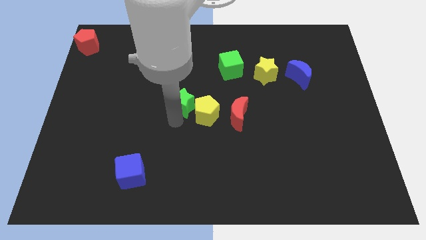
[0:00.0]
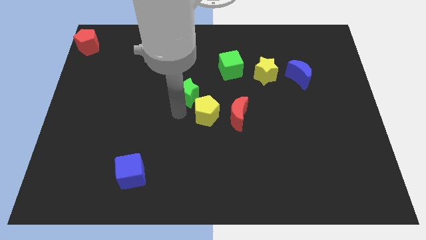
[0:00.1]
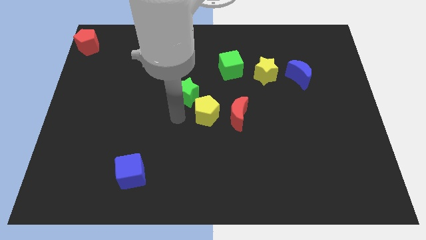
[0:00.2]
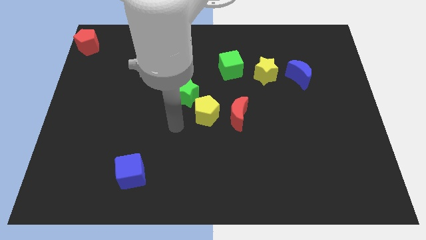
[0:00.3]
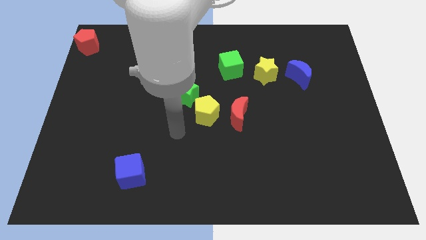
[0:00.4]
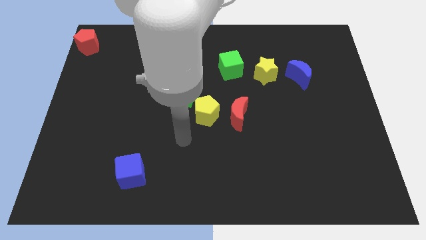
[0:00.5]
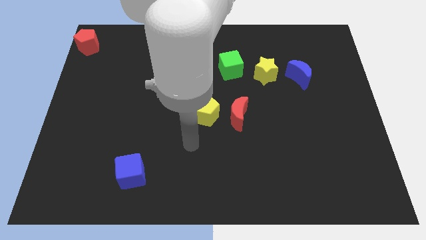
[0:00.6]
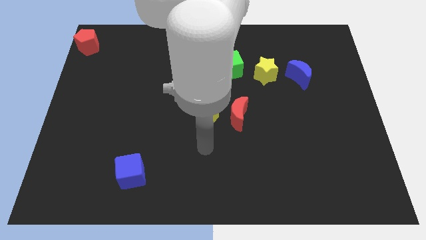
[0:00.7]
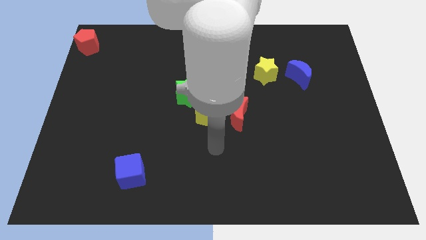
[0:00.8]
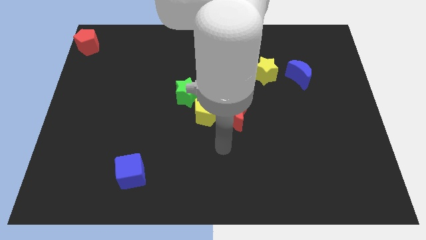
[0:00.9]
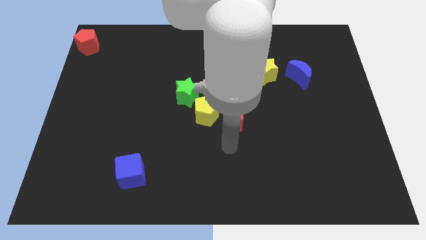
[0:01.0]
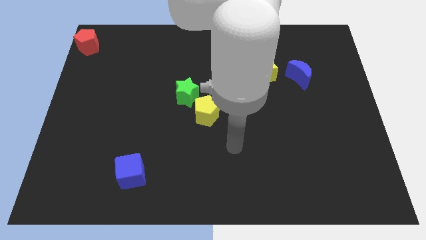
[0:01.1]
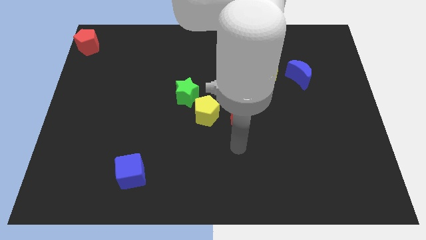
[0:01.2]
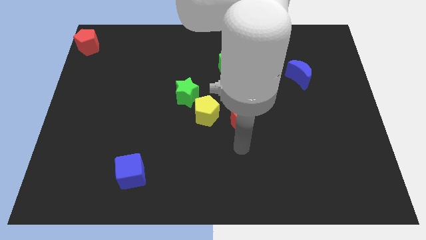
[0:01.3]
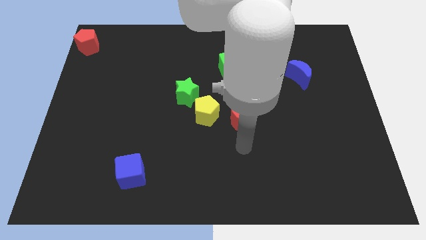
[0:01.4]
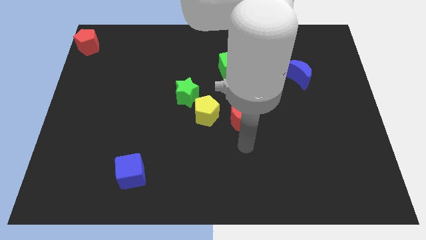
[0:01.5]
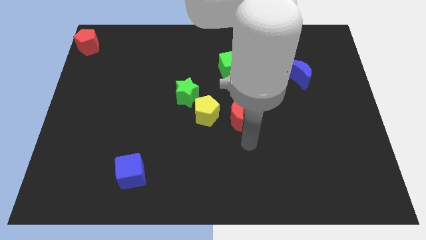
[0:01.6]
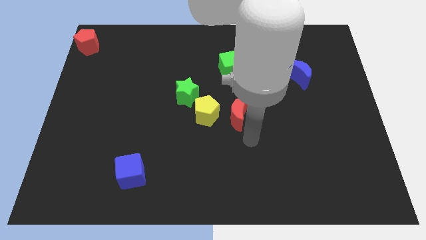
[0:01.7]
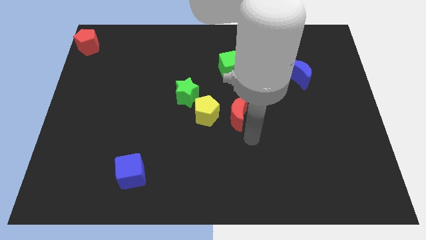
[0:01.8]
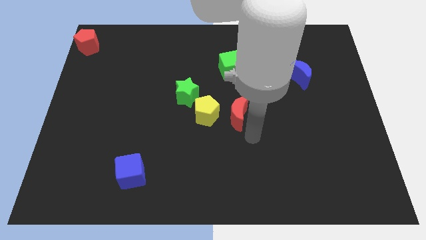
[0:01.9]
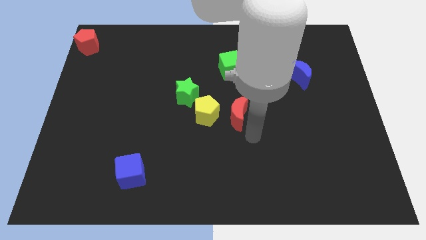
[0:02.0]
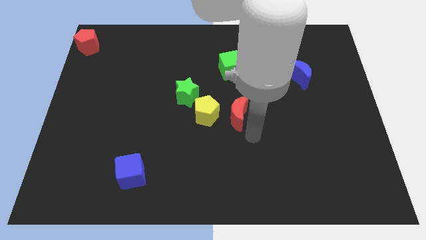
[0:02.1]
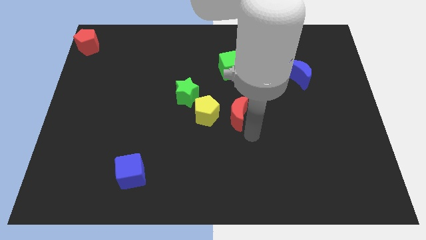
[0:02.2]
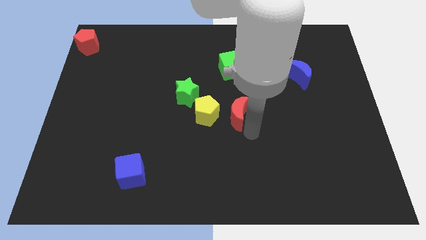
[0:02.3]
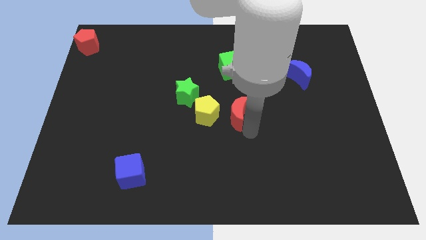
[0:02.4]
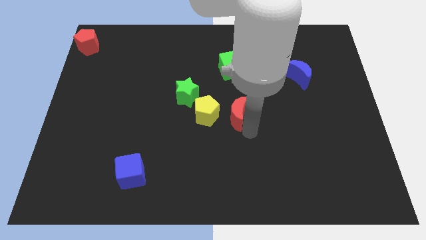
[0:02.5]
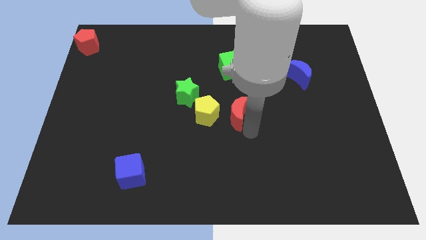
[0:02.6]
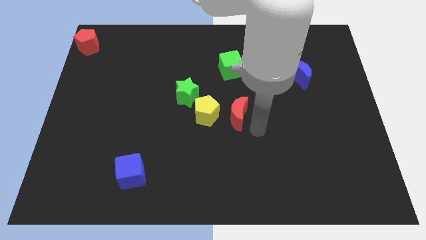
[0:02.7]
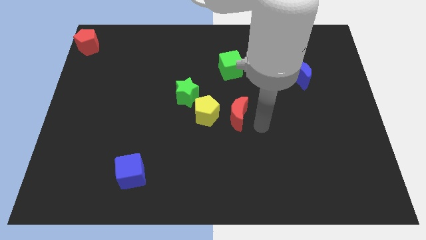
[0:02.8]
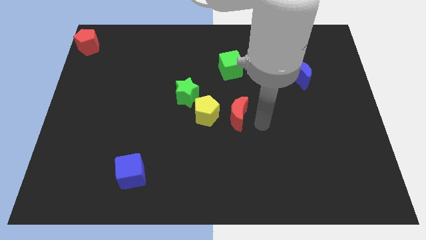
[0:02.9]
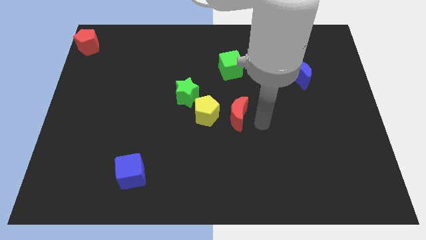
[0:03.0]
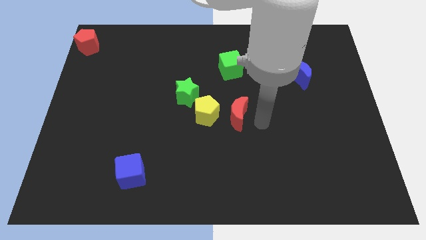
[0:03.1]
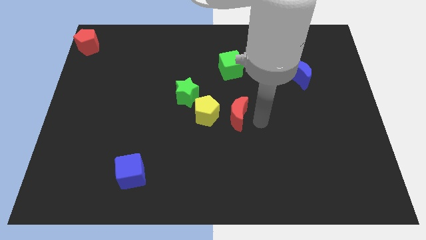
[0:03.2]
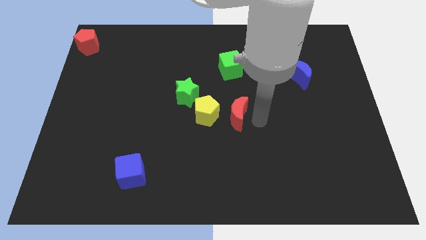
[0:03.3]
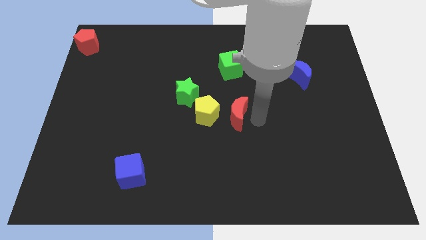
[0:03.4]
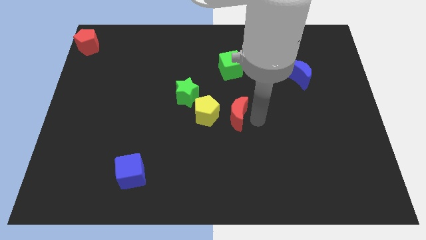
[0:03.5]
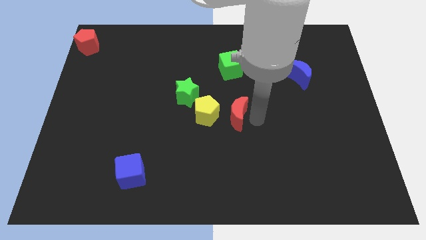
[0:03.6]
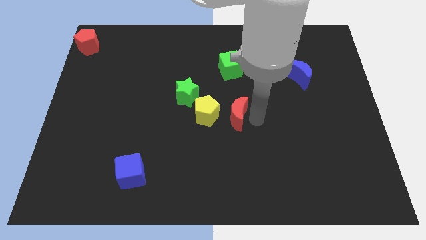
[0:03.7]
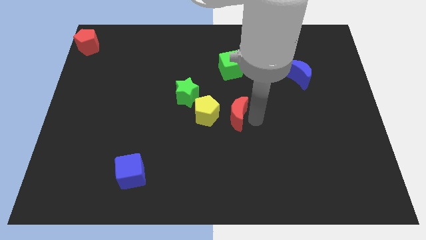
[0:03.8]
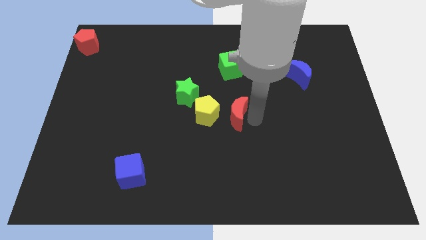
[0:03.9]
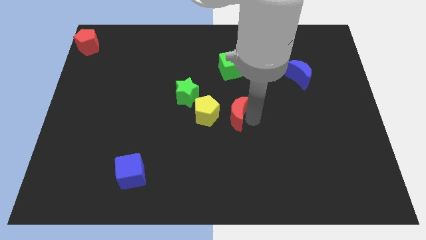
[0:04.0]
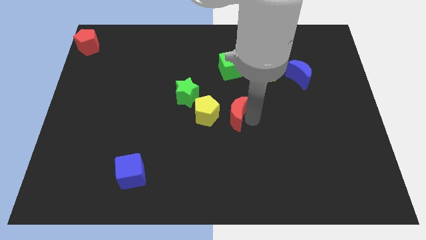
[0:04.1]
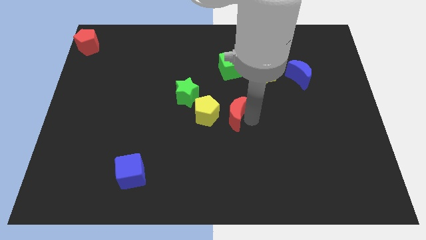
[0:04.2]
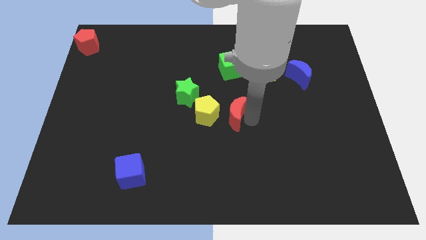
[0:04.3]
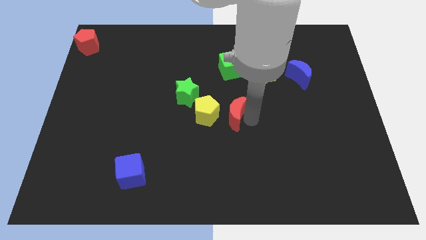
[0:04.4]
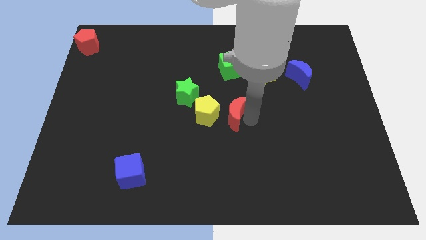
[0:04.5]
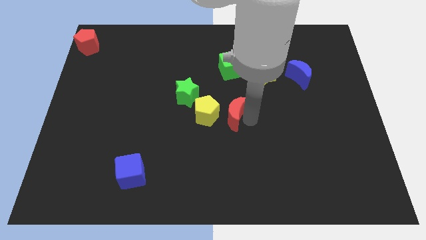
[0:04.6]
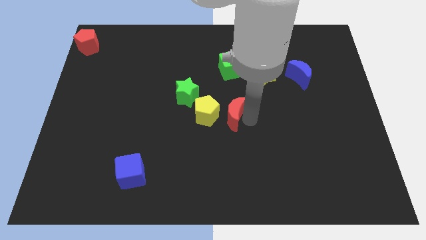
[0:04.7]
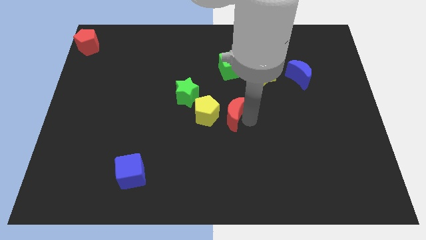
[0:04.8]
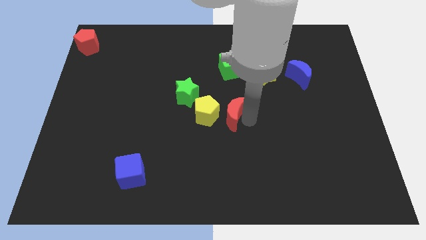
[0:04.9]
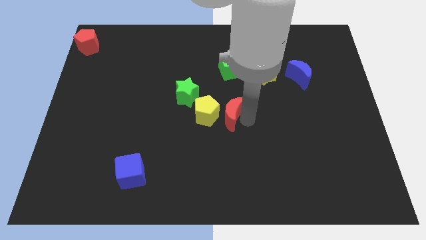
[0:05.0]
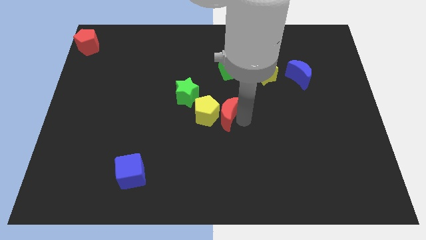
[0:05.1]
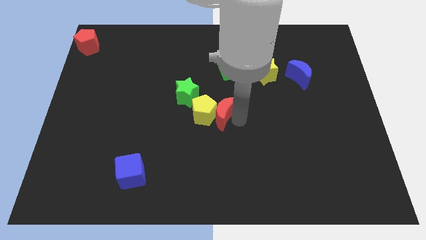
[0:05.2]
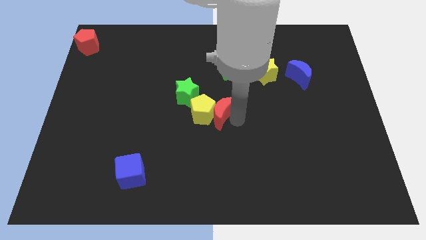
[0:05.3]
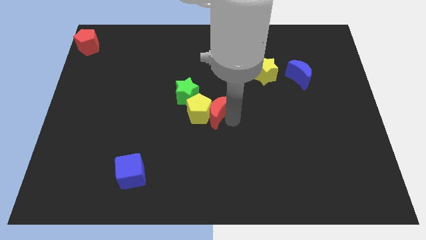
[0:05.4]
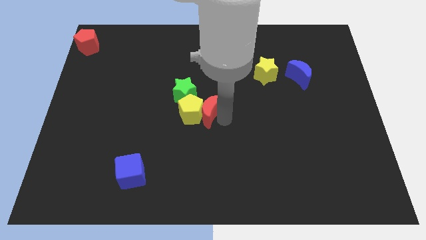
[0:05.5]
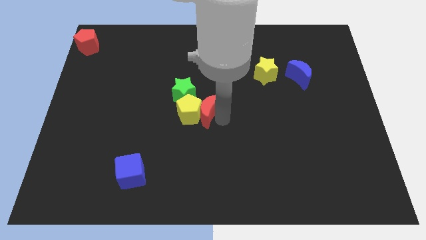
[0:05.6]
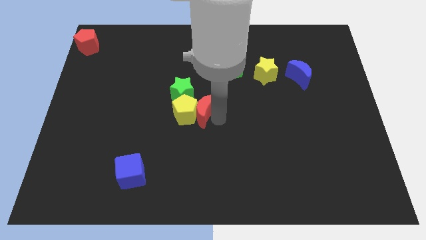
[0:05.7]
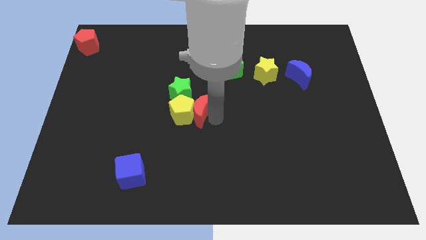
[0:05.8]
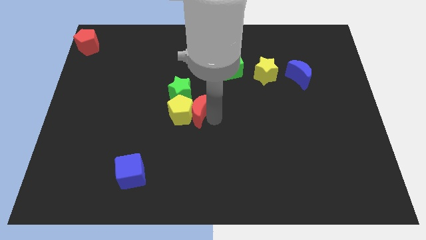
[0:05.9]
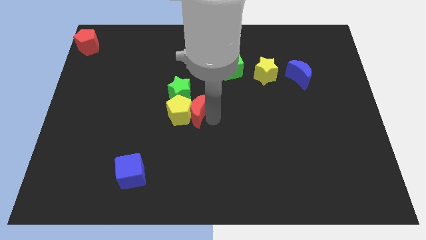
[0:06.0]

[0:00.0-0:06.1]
move the red moon to the right side of the yellow pentagon

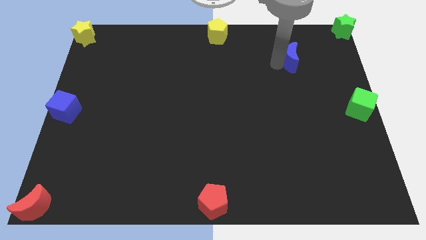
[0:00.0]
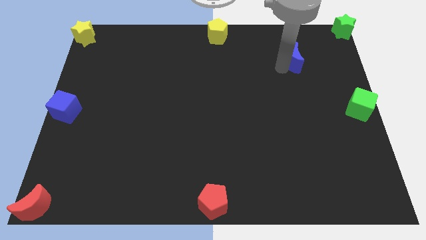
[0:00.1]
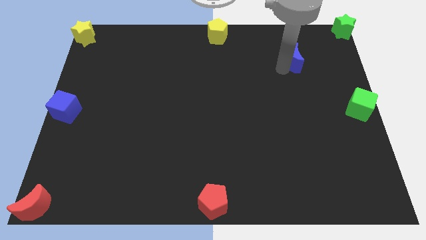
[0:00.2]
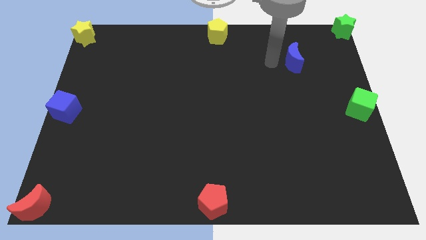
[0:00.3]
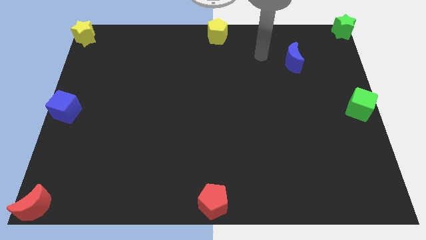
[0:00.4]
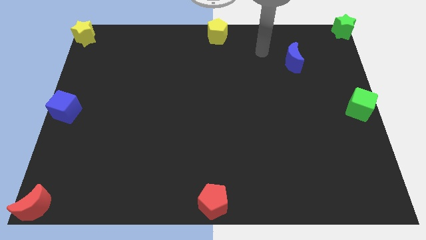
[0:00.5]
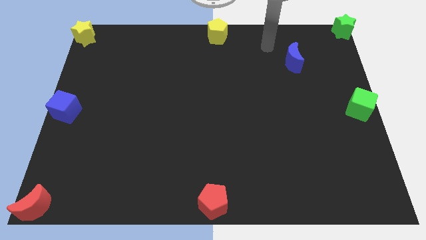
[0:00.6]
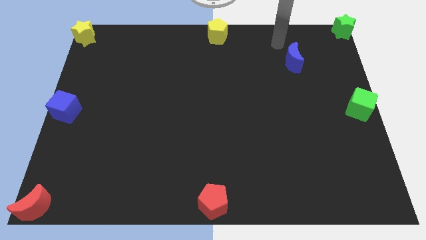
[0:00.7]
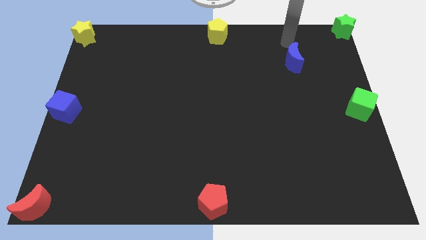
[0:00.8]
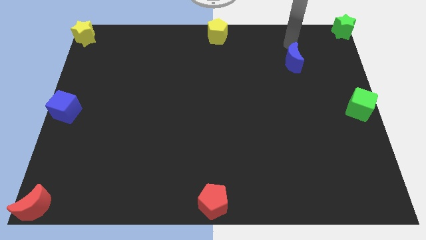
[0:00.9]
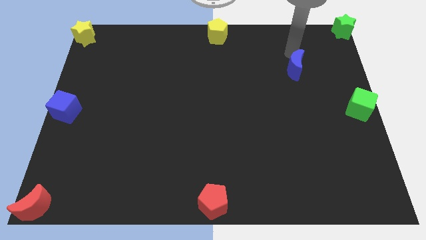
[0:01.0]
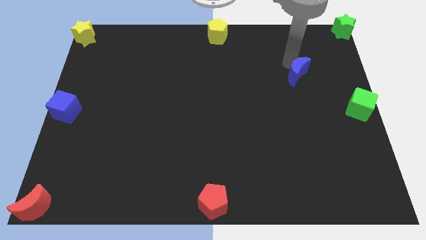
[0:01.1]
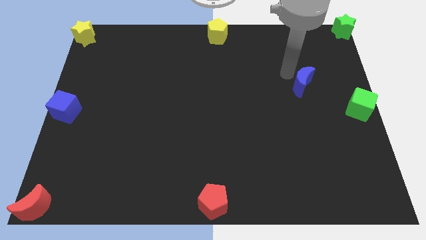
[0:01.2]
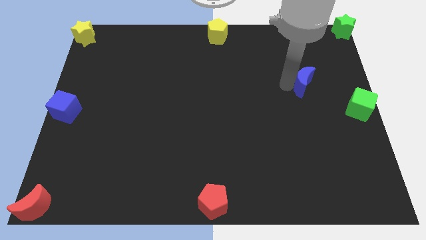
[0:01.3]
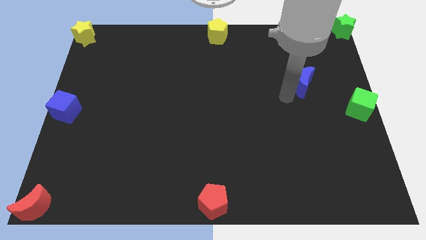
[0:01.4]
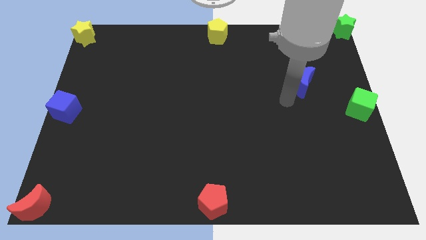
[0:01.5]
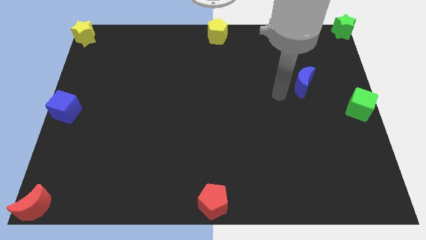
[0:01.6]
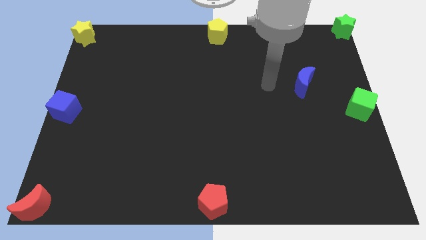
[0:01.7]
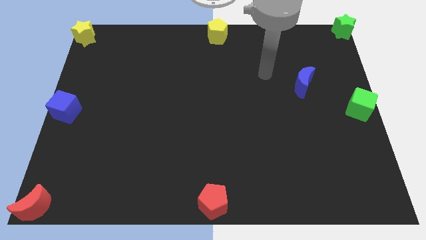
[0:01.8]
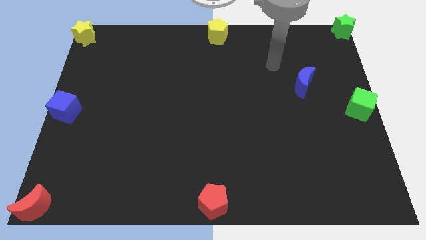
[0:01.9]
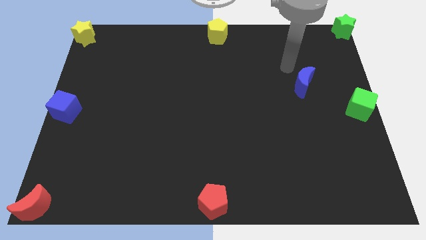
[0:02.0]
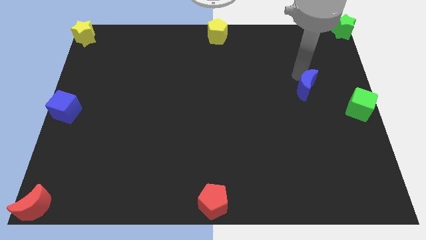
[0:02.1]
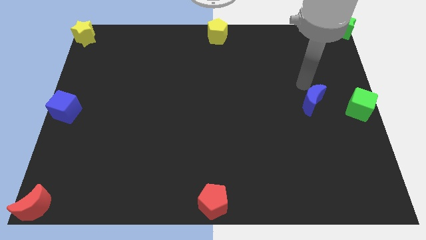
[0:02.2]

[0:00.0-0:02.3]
push the blue crescent parallel to the left of the green cube

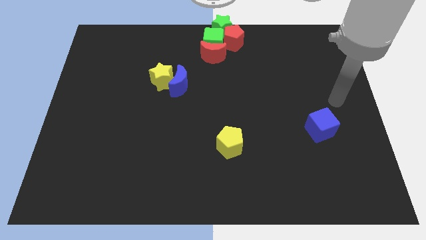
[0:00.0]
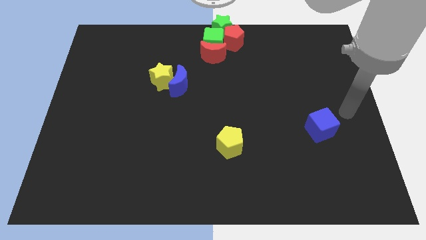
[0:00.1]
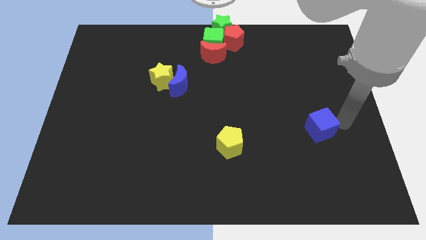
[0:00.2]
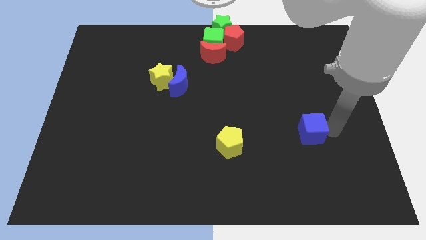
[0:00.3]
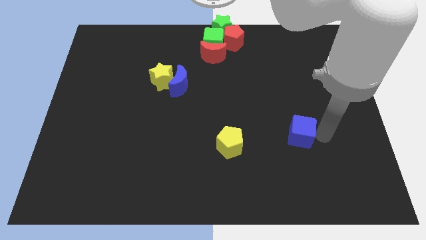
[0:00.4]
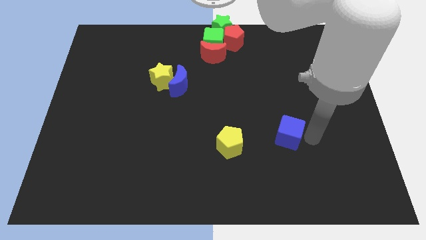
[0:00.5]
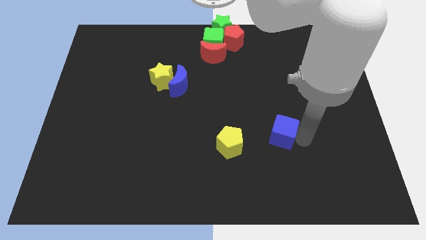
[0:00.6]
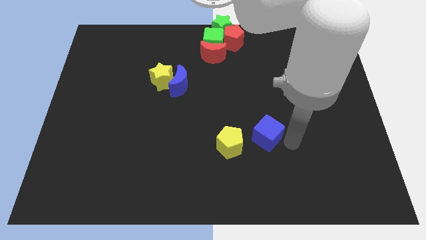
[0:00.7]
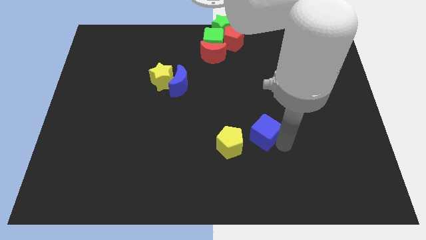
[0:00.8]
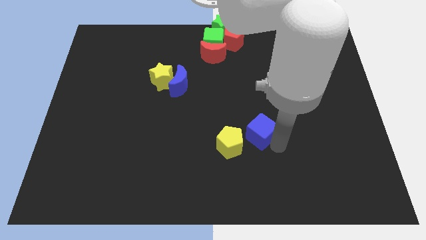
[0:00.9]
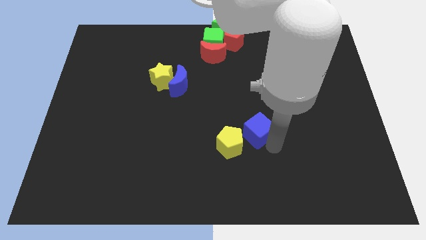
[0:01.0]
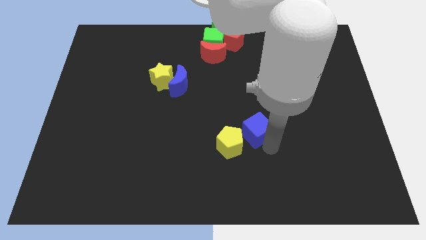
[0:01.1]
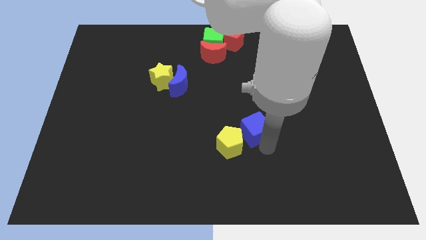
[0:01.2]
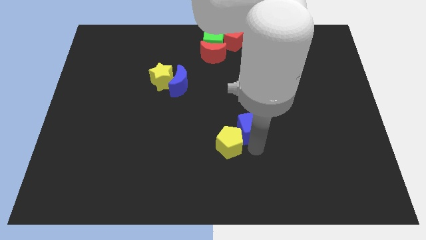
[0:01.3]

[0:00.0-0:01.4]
move the blue cube into the yellow pentagon
